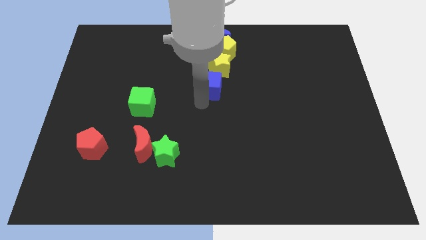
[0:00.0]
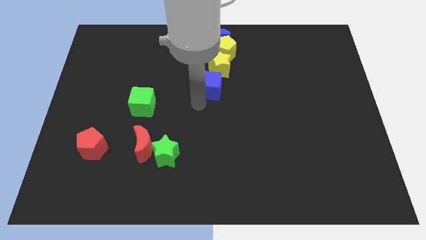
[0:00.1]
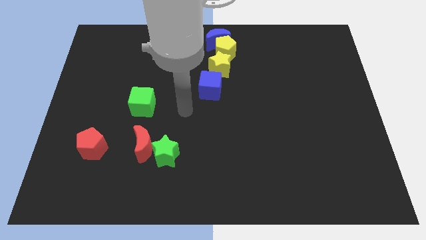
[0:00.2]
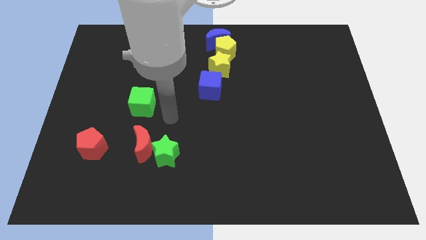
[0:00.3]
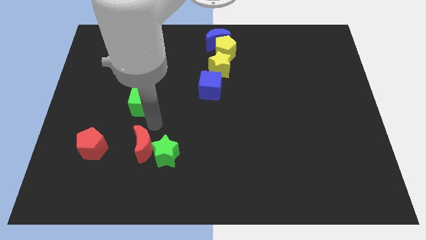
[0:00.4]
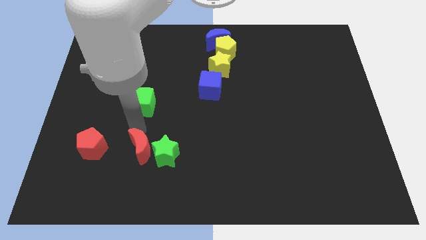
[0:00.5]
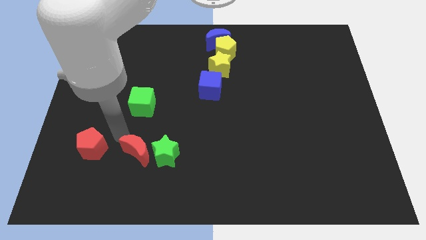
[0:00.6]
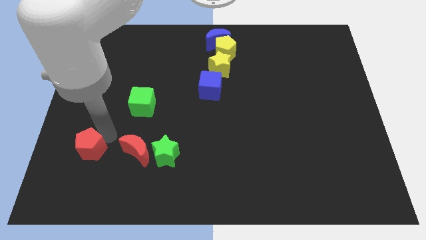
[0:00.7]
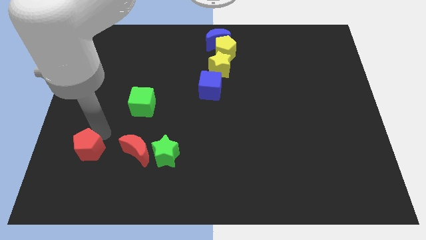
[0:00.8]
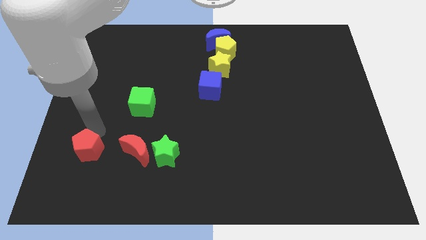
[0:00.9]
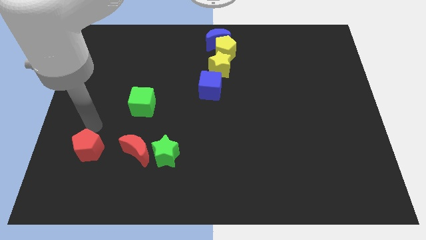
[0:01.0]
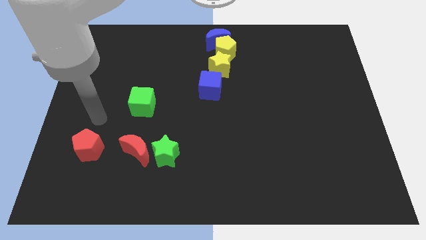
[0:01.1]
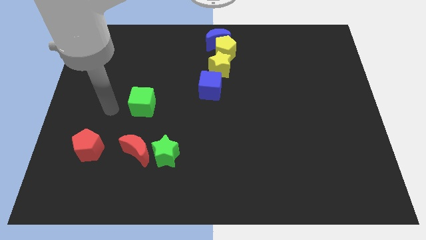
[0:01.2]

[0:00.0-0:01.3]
move away from the blue cube

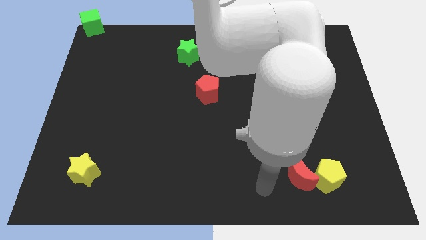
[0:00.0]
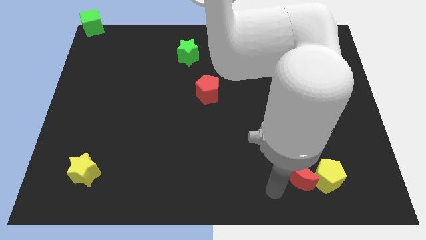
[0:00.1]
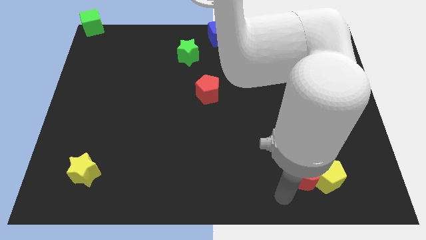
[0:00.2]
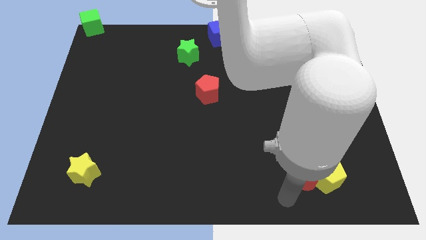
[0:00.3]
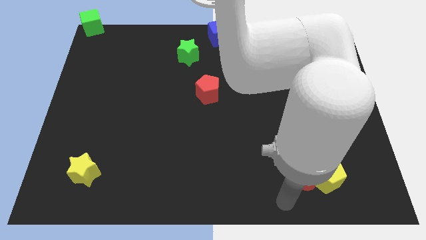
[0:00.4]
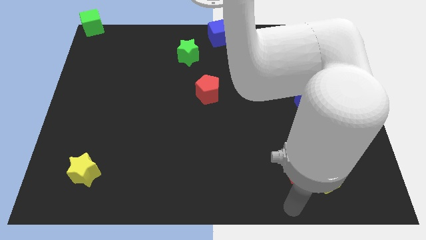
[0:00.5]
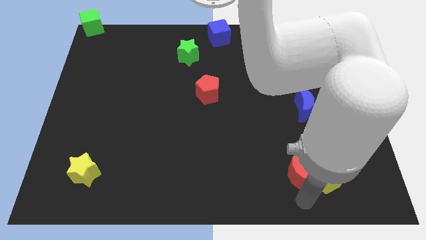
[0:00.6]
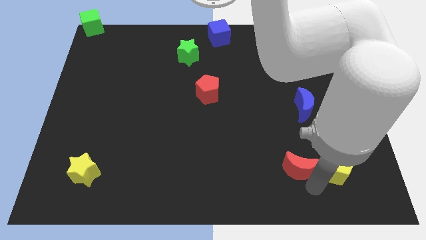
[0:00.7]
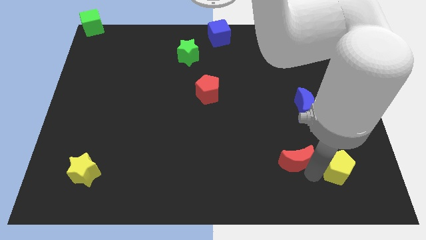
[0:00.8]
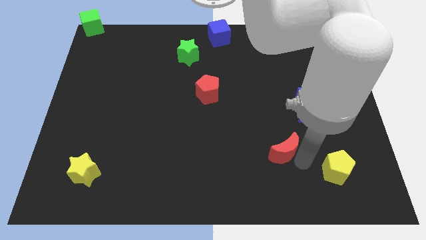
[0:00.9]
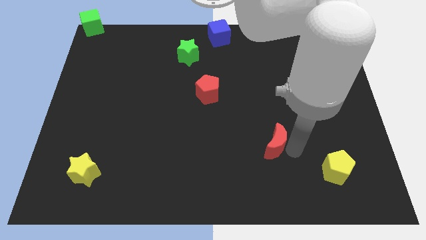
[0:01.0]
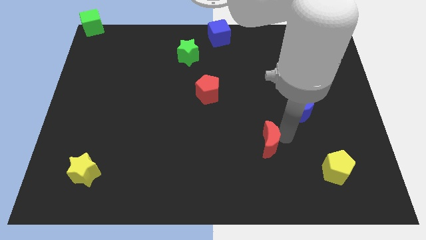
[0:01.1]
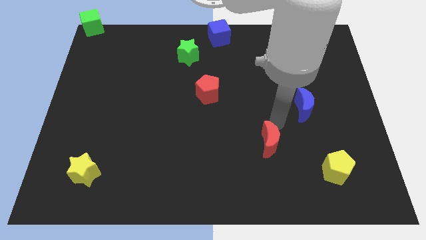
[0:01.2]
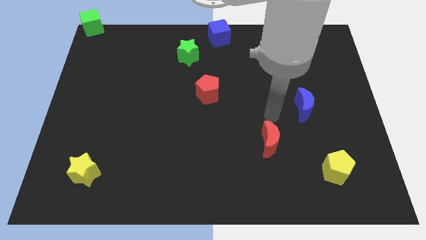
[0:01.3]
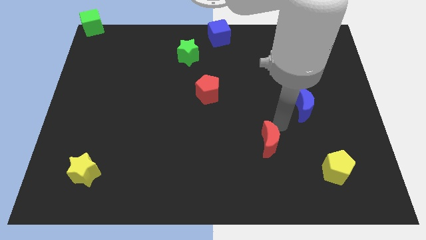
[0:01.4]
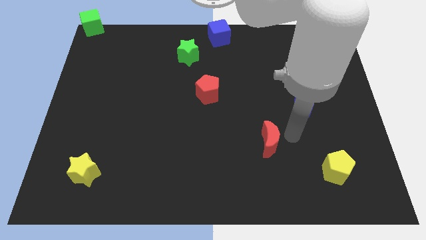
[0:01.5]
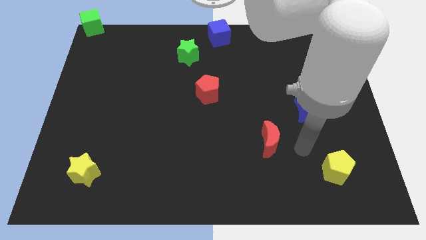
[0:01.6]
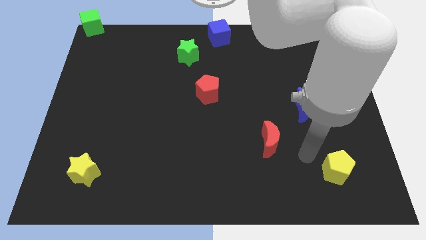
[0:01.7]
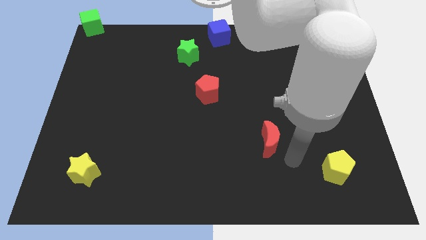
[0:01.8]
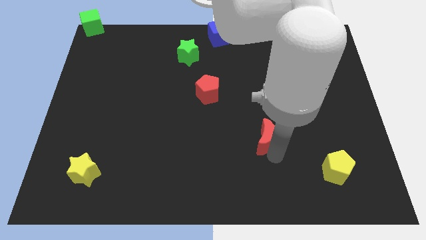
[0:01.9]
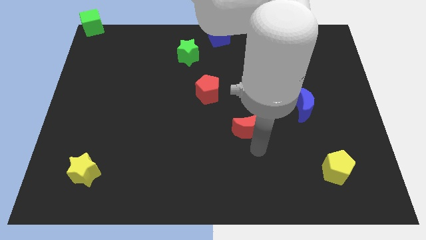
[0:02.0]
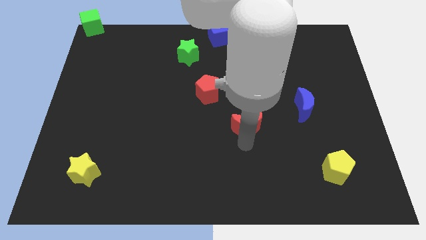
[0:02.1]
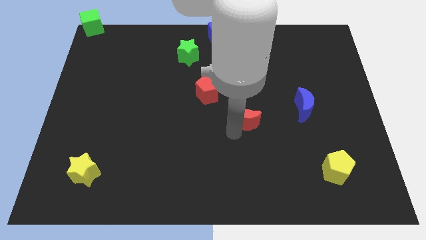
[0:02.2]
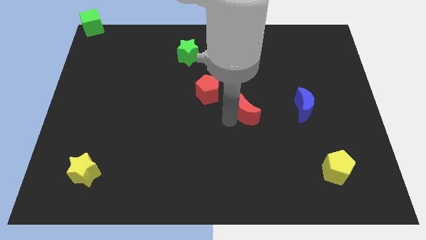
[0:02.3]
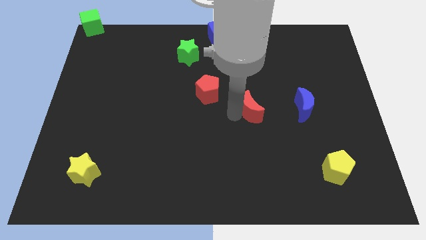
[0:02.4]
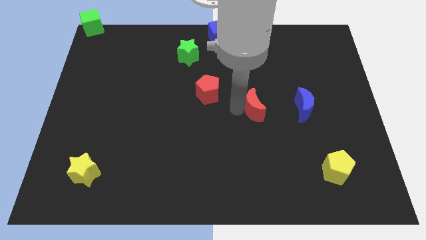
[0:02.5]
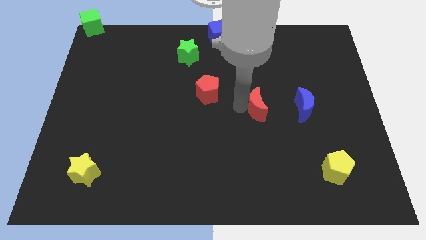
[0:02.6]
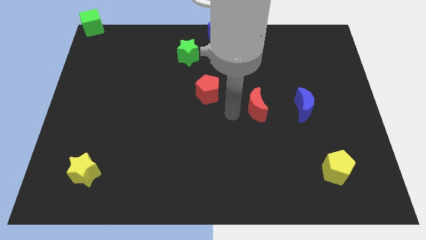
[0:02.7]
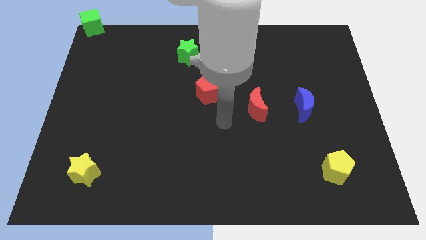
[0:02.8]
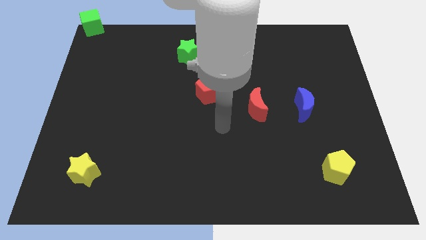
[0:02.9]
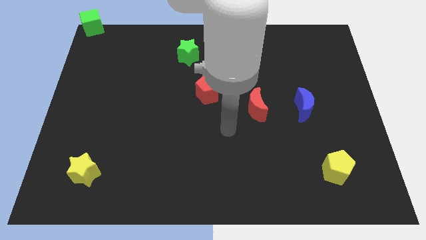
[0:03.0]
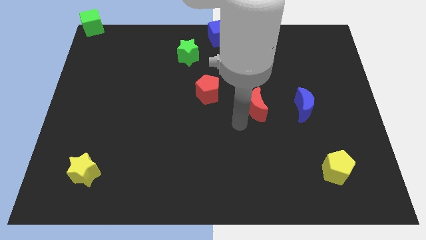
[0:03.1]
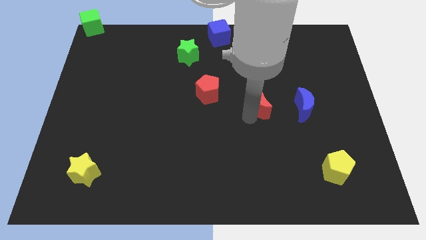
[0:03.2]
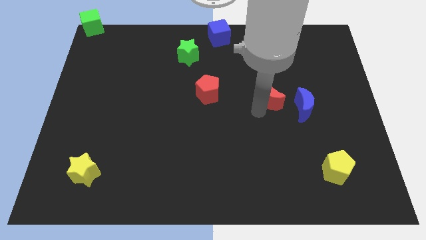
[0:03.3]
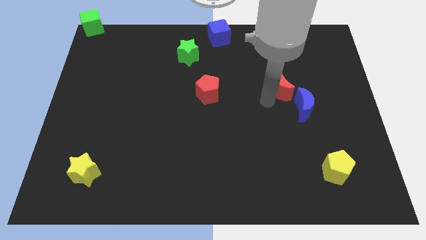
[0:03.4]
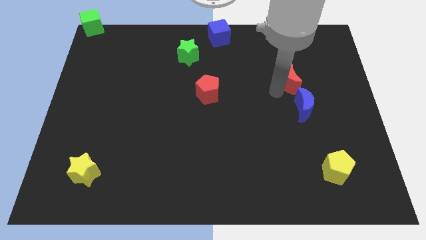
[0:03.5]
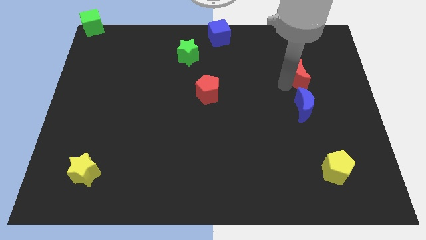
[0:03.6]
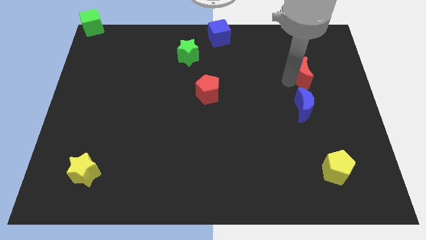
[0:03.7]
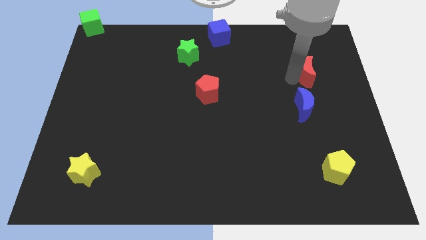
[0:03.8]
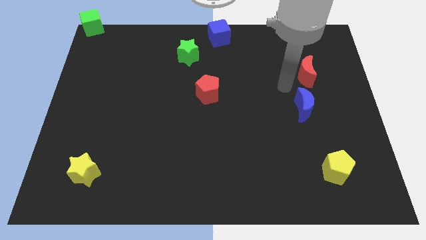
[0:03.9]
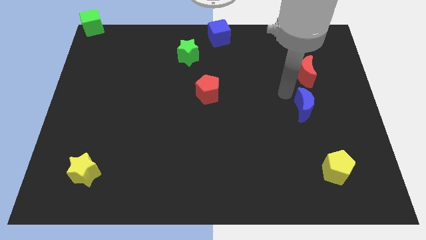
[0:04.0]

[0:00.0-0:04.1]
separate red moon and yellow pentagon

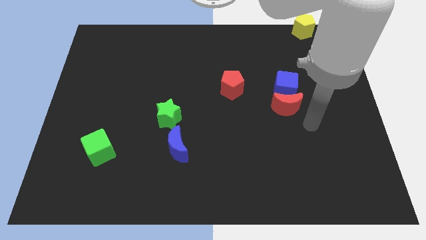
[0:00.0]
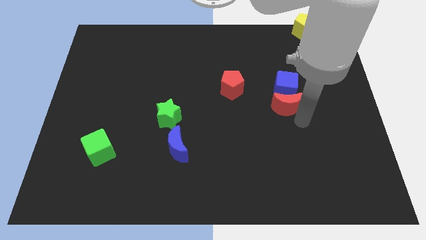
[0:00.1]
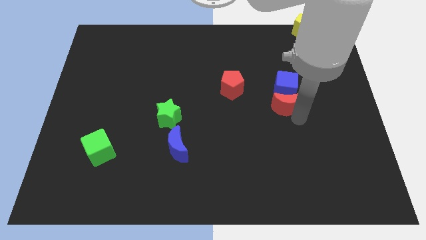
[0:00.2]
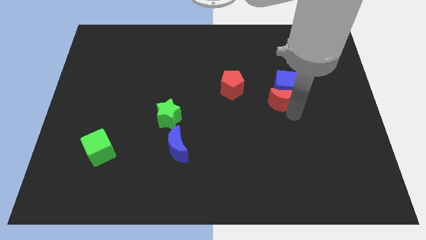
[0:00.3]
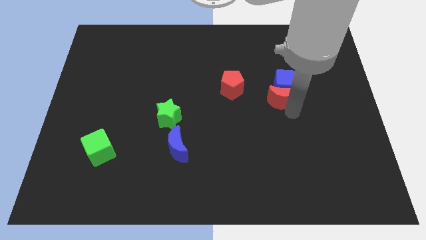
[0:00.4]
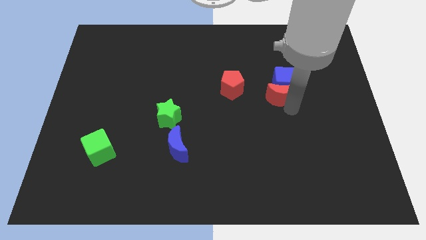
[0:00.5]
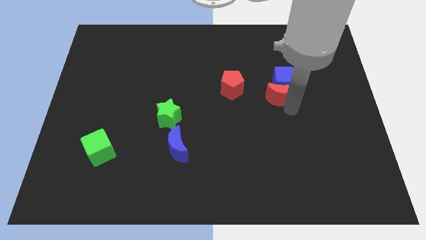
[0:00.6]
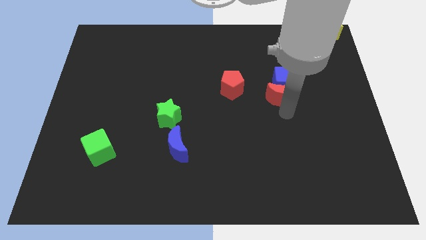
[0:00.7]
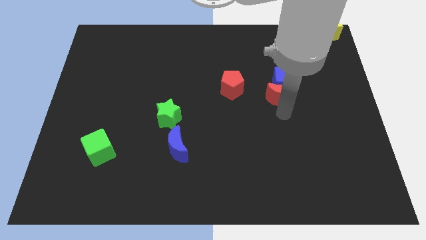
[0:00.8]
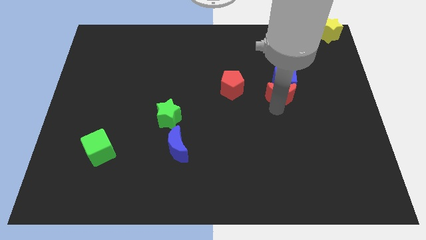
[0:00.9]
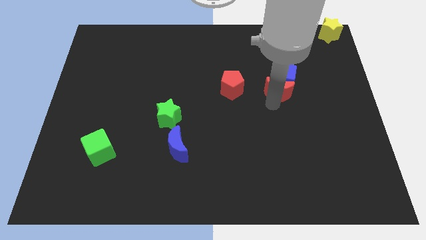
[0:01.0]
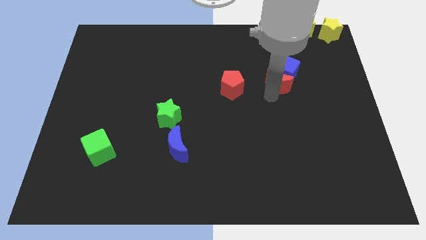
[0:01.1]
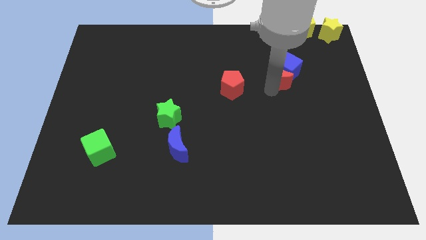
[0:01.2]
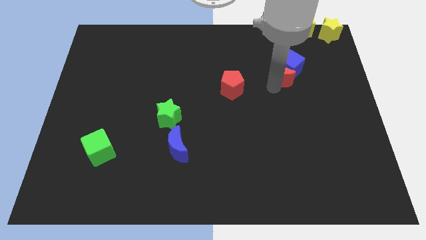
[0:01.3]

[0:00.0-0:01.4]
push the red moon and blue cube towards the top side of the board

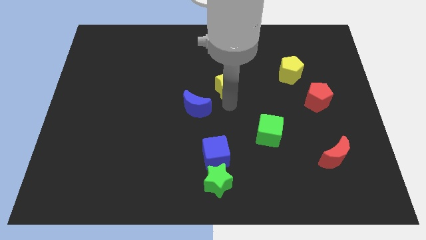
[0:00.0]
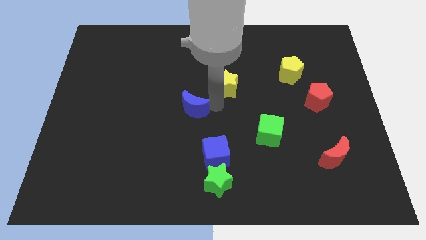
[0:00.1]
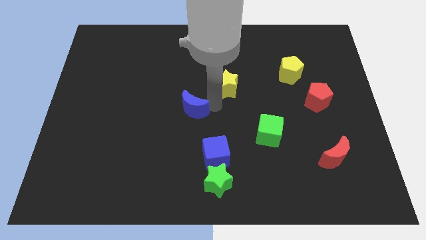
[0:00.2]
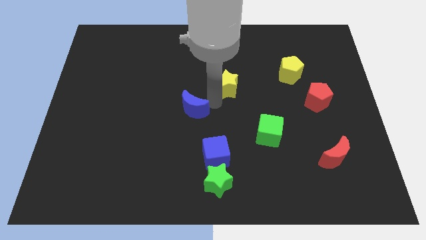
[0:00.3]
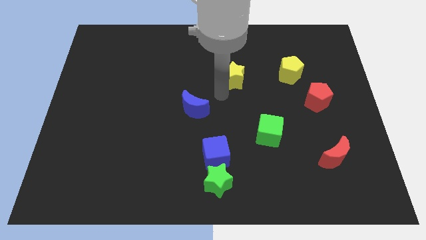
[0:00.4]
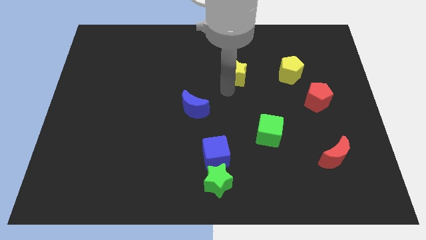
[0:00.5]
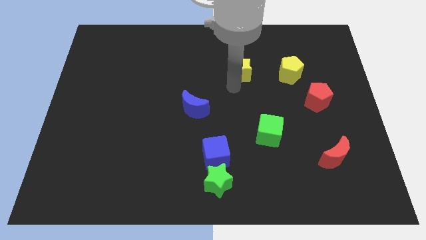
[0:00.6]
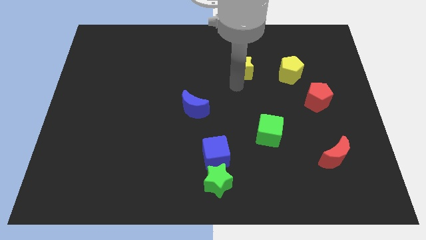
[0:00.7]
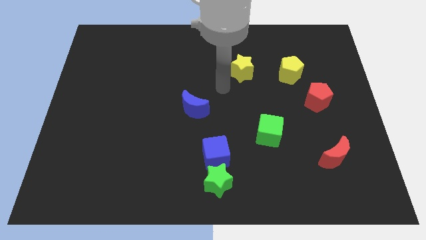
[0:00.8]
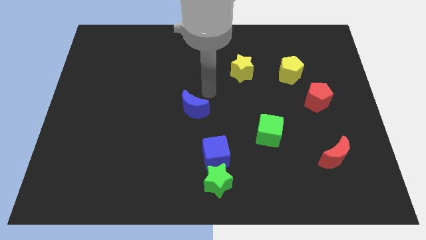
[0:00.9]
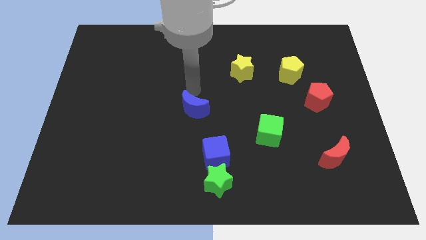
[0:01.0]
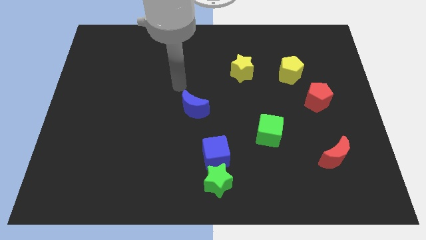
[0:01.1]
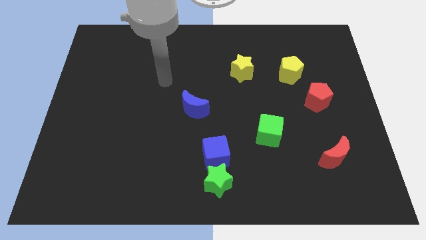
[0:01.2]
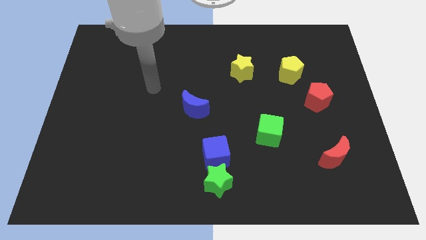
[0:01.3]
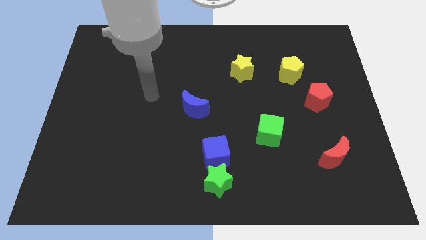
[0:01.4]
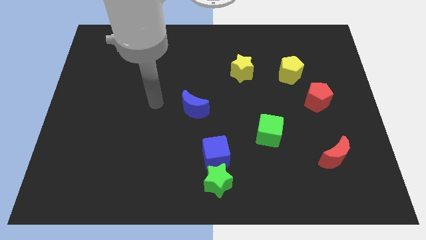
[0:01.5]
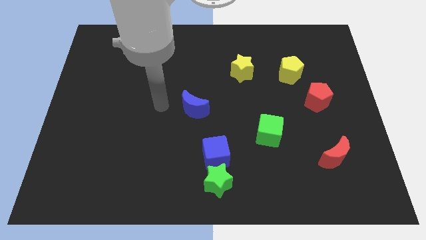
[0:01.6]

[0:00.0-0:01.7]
place the yellow star horizontally to the left of the yellow pentagon

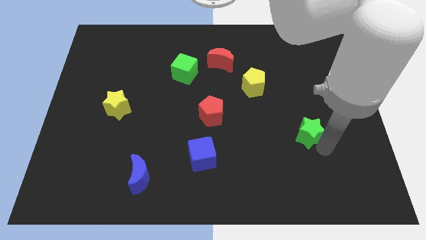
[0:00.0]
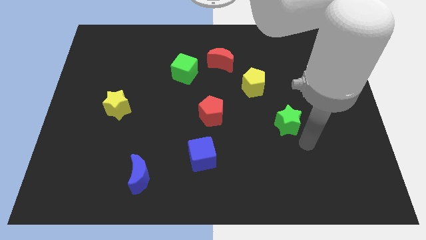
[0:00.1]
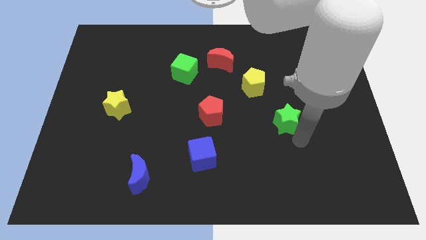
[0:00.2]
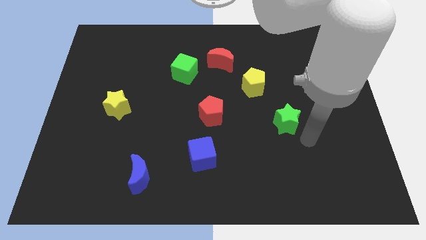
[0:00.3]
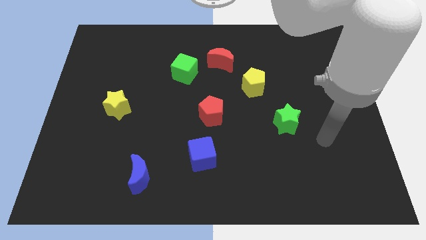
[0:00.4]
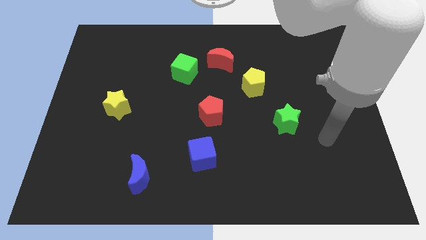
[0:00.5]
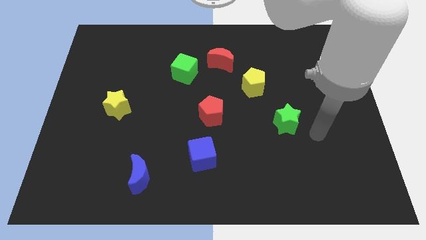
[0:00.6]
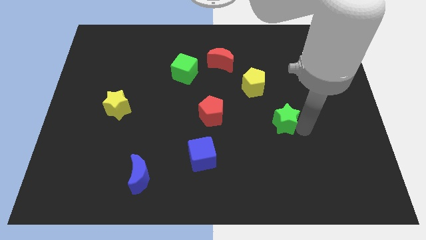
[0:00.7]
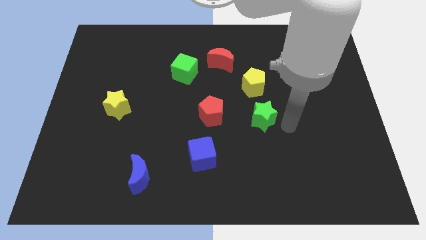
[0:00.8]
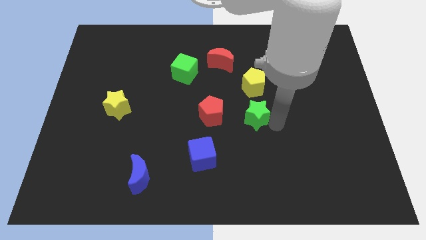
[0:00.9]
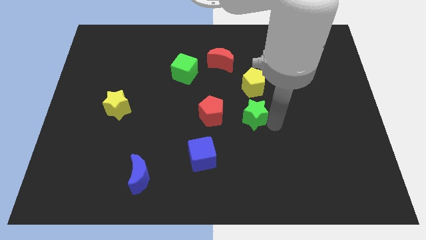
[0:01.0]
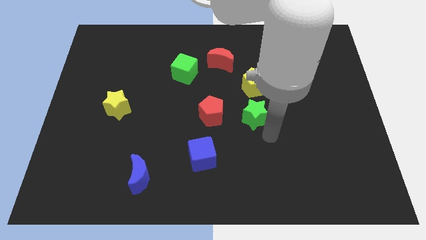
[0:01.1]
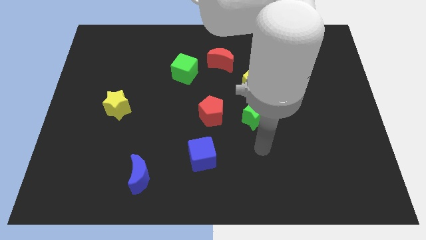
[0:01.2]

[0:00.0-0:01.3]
put the green star vertically bottom to the yellow pentagon
